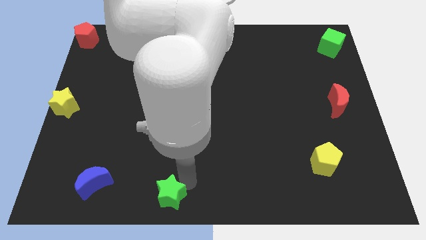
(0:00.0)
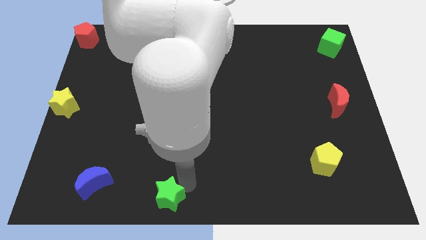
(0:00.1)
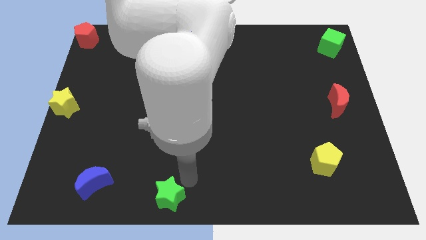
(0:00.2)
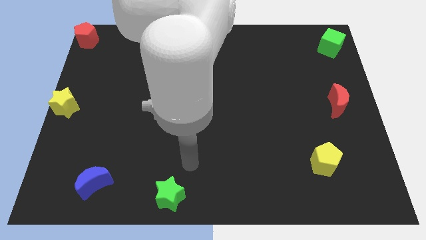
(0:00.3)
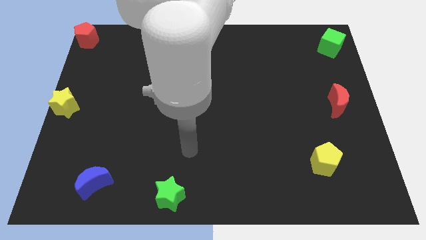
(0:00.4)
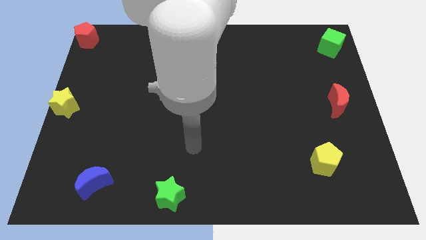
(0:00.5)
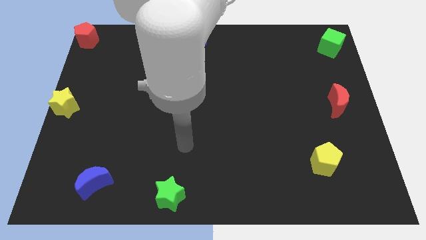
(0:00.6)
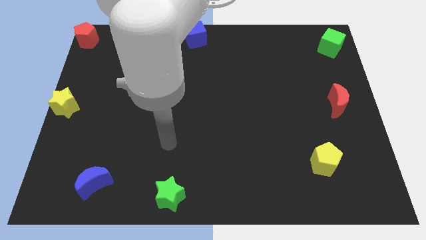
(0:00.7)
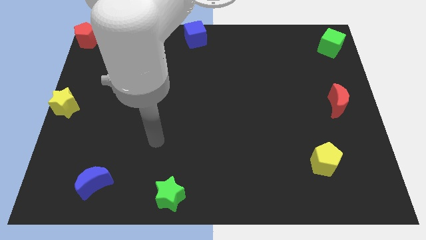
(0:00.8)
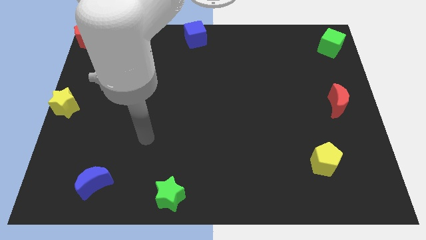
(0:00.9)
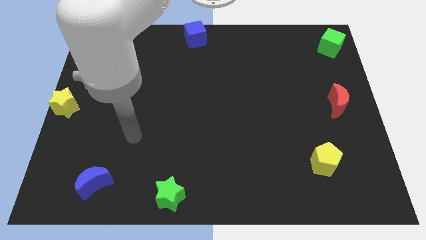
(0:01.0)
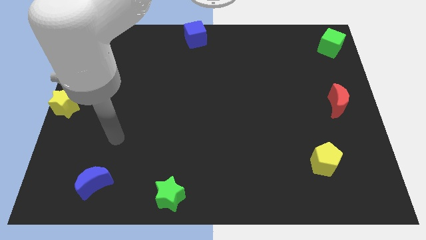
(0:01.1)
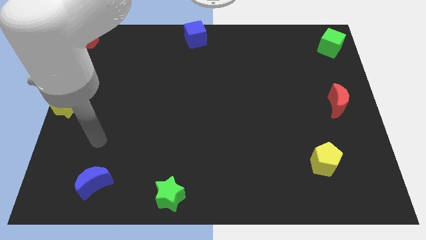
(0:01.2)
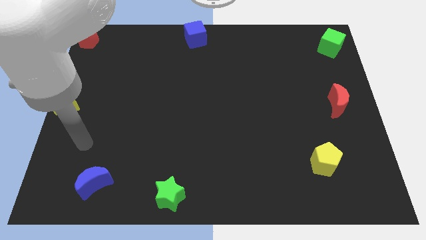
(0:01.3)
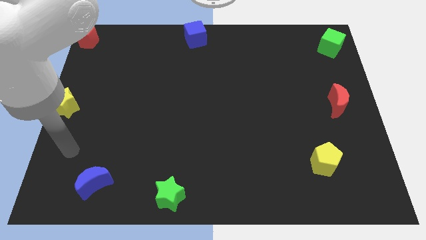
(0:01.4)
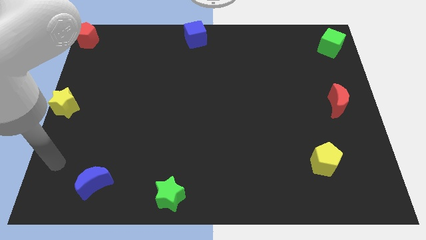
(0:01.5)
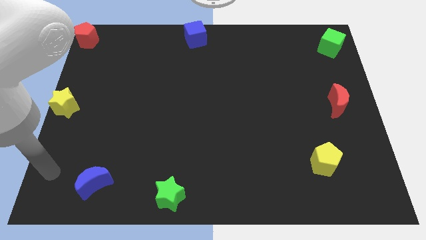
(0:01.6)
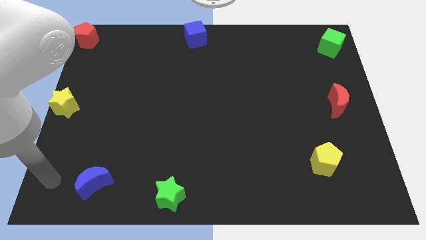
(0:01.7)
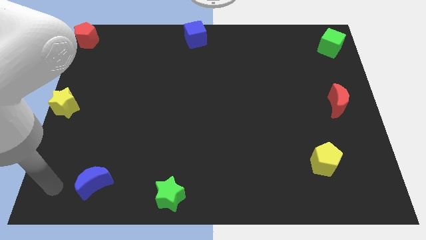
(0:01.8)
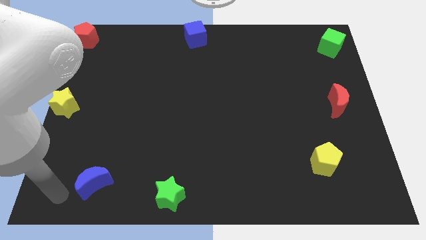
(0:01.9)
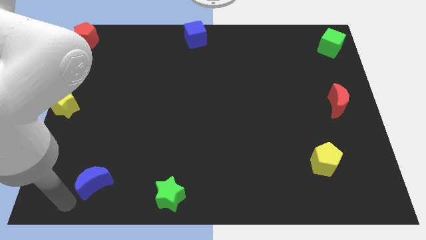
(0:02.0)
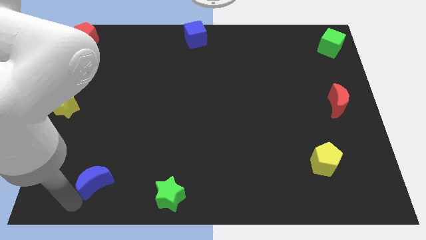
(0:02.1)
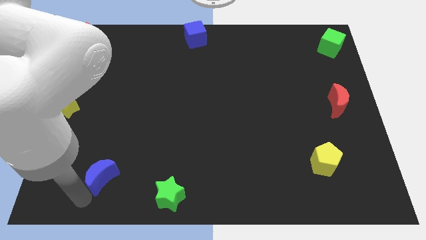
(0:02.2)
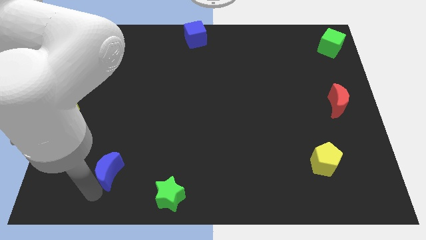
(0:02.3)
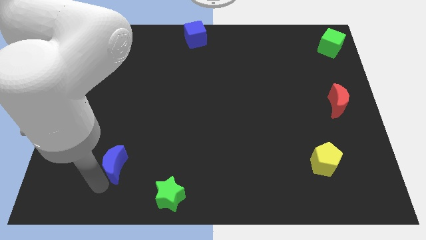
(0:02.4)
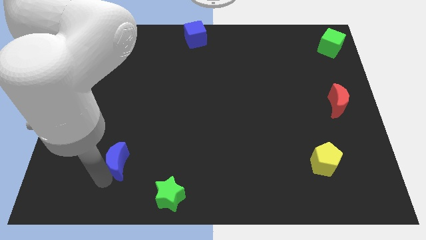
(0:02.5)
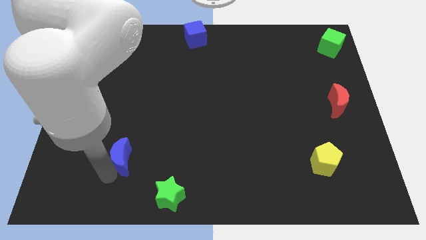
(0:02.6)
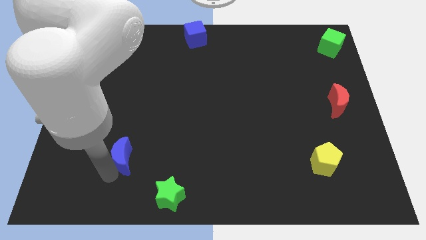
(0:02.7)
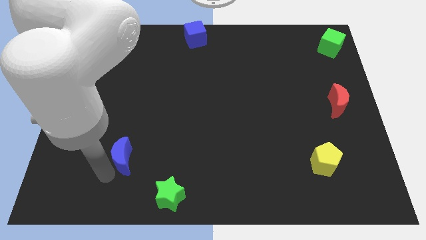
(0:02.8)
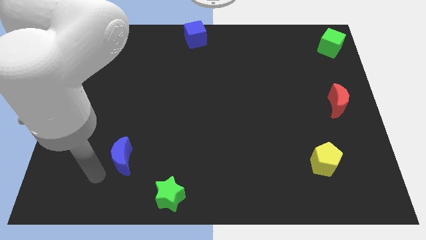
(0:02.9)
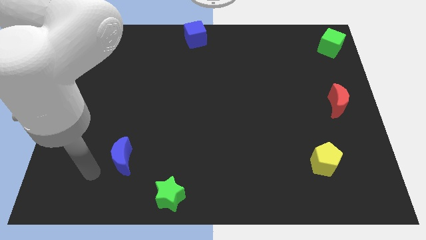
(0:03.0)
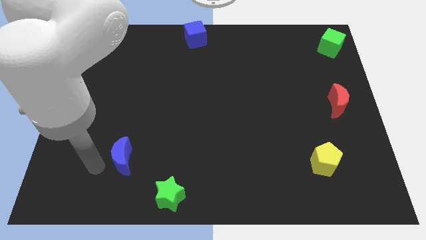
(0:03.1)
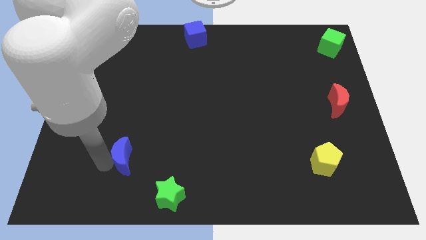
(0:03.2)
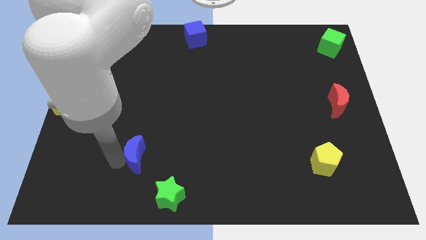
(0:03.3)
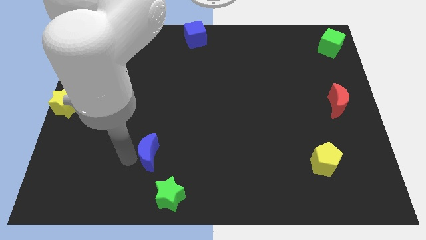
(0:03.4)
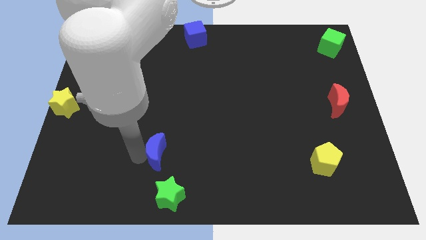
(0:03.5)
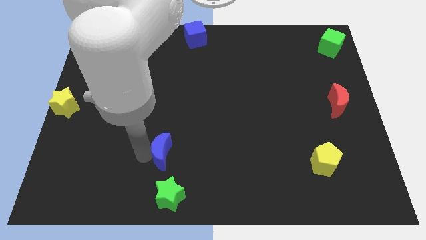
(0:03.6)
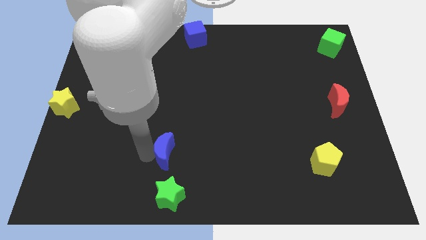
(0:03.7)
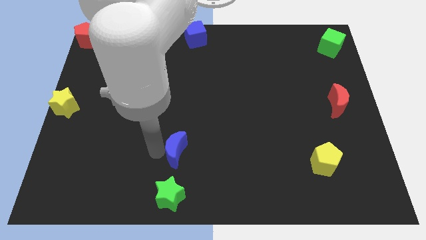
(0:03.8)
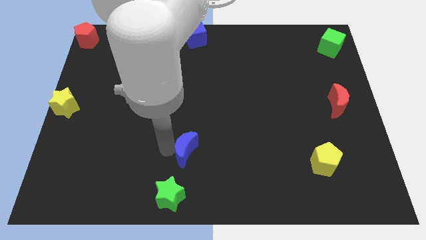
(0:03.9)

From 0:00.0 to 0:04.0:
move the blue moon above the green star

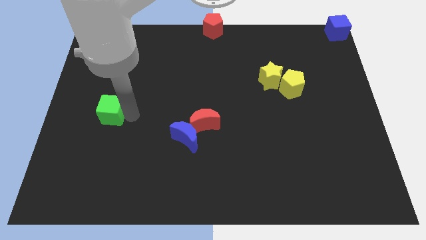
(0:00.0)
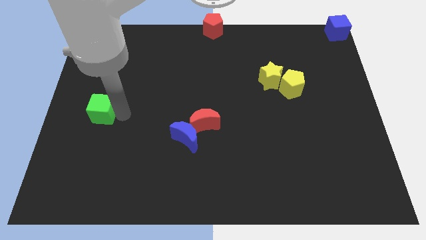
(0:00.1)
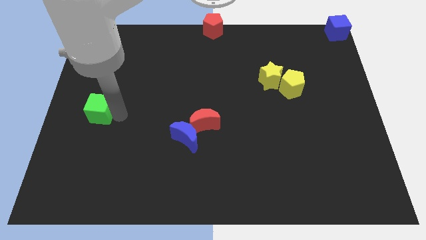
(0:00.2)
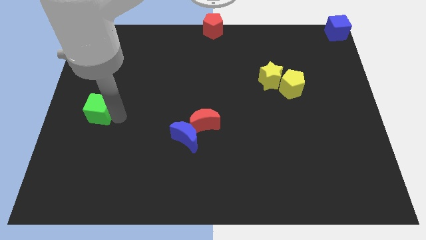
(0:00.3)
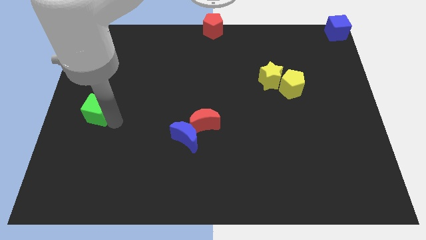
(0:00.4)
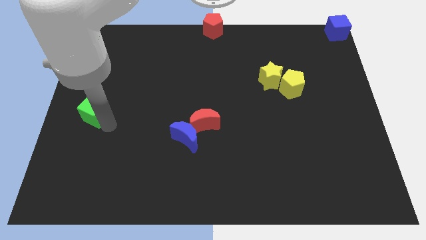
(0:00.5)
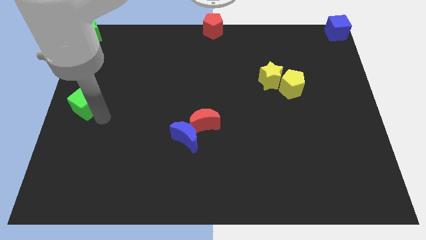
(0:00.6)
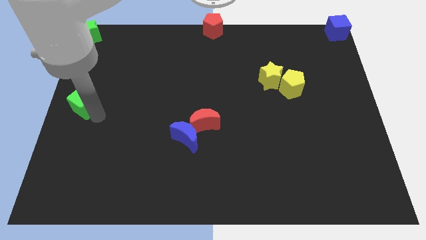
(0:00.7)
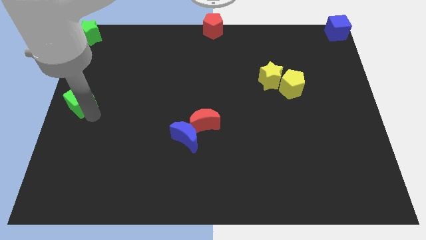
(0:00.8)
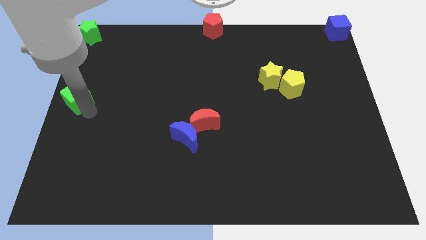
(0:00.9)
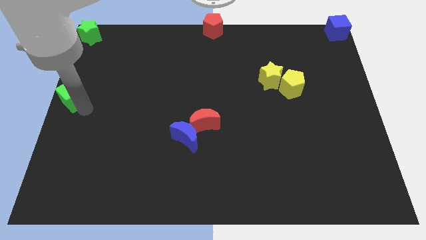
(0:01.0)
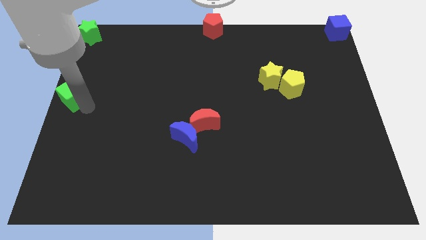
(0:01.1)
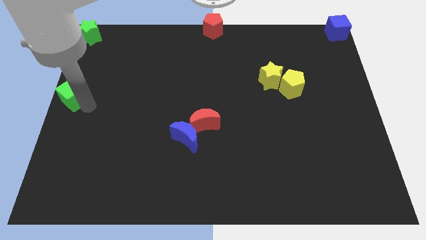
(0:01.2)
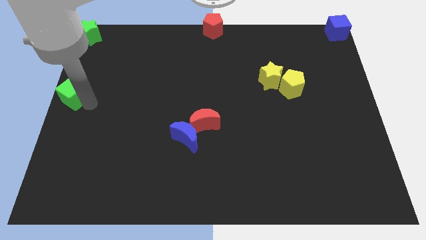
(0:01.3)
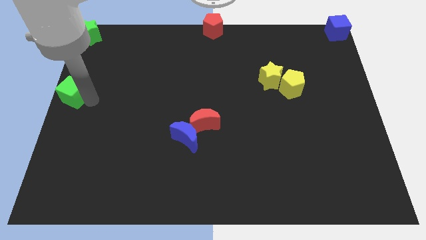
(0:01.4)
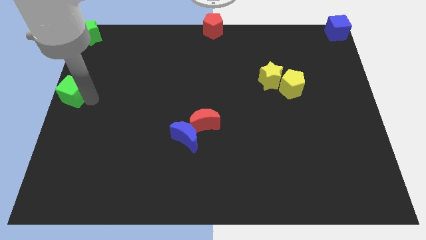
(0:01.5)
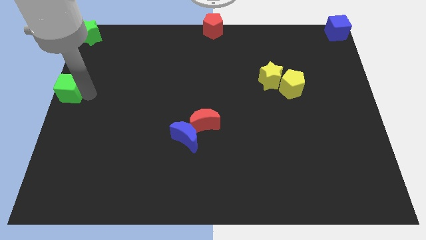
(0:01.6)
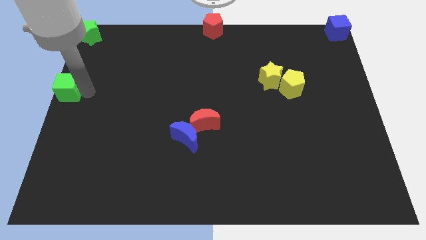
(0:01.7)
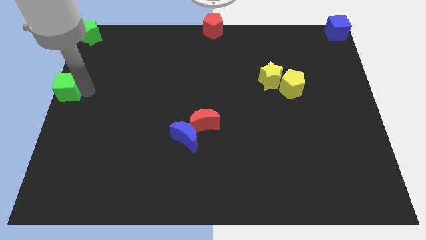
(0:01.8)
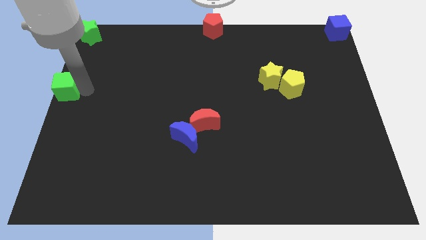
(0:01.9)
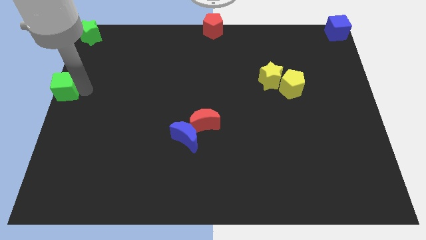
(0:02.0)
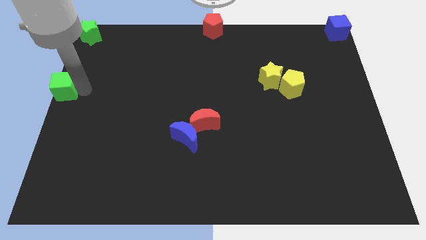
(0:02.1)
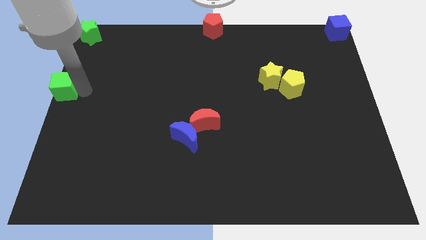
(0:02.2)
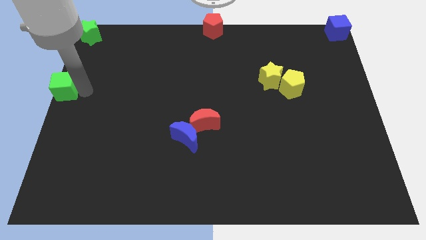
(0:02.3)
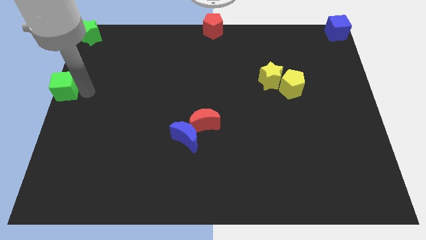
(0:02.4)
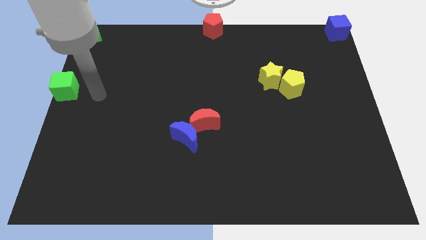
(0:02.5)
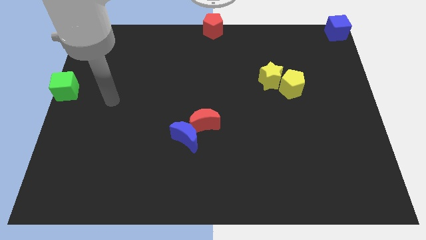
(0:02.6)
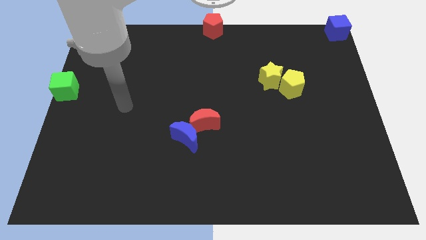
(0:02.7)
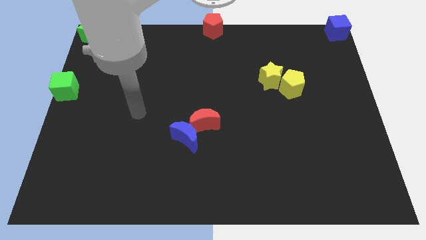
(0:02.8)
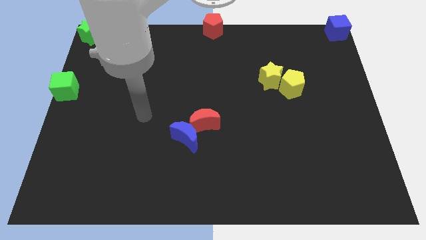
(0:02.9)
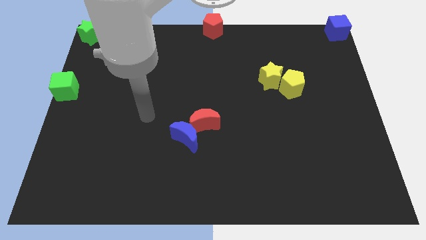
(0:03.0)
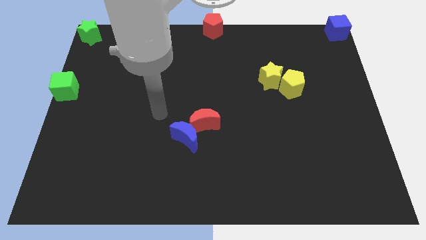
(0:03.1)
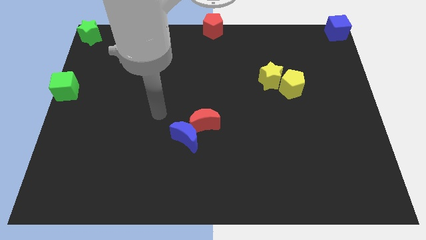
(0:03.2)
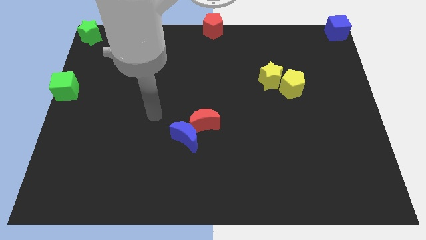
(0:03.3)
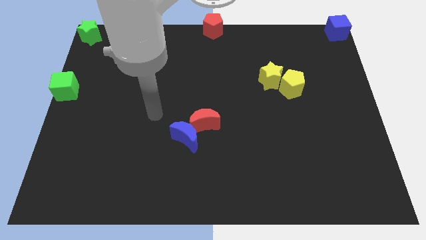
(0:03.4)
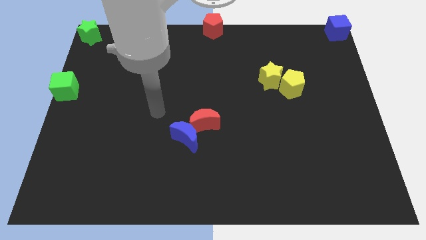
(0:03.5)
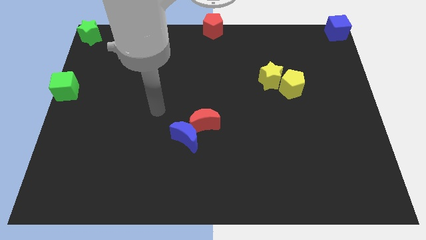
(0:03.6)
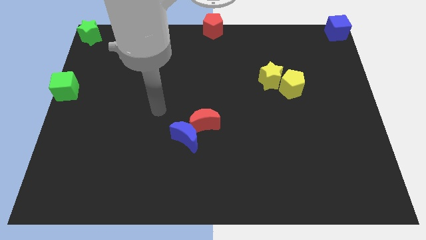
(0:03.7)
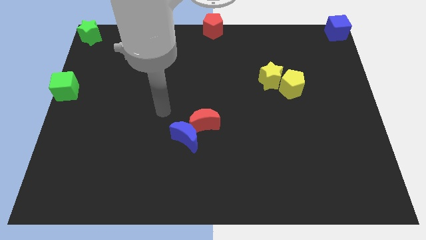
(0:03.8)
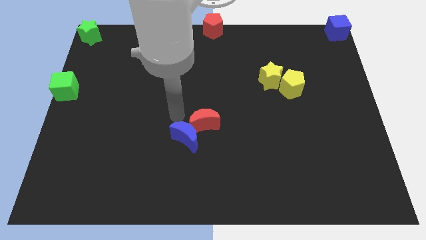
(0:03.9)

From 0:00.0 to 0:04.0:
move the green cube to the center left

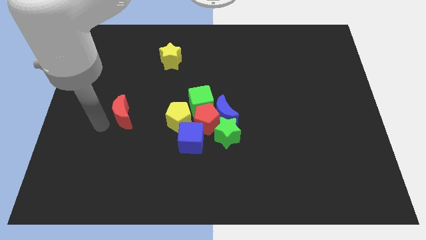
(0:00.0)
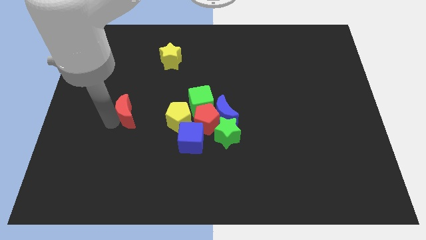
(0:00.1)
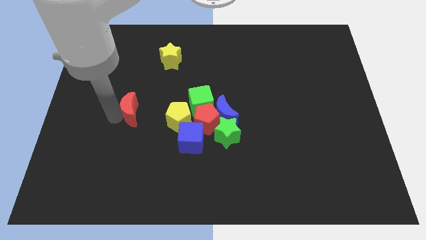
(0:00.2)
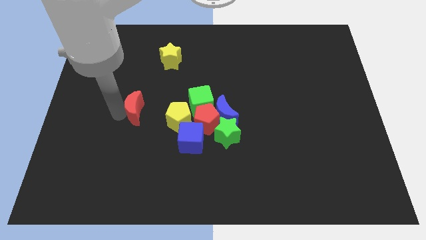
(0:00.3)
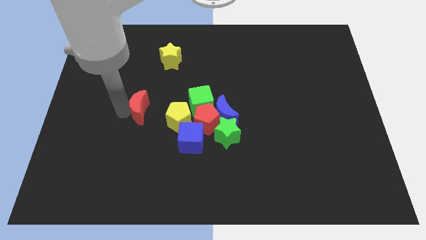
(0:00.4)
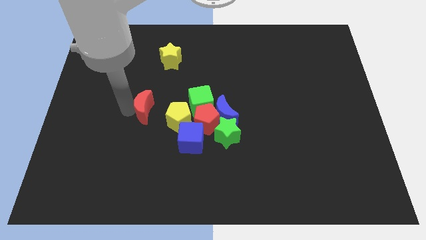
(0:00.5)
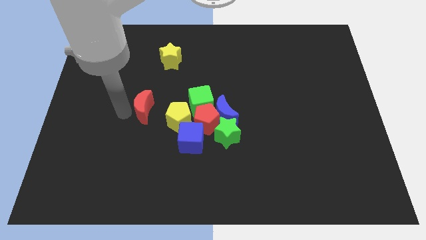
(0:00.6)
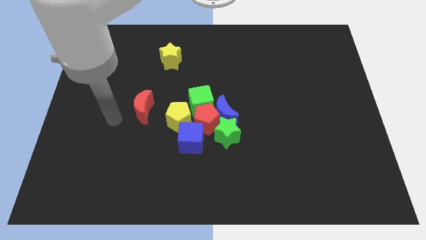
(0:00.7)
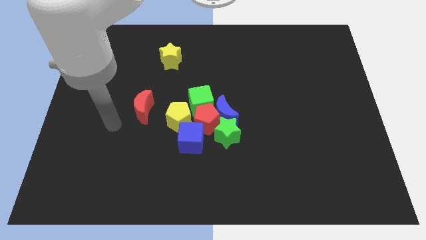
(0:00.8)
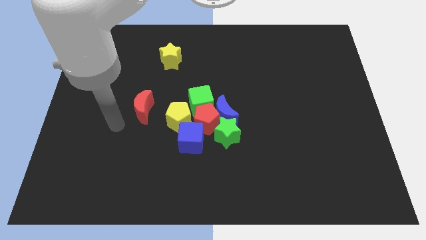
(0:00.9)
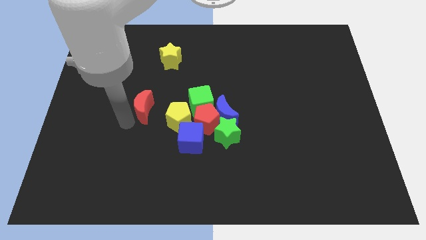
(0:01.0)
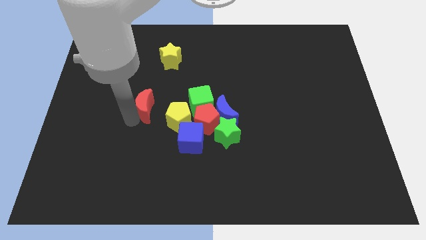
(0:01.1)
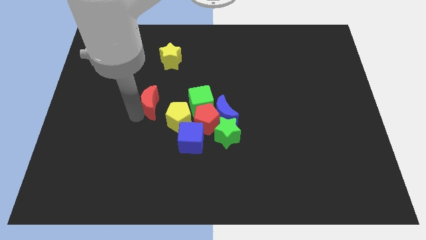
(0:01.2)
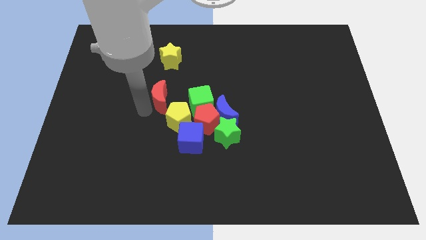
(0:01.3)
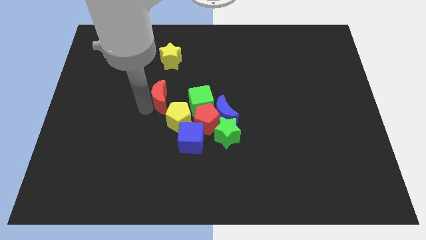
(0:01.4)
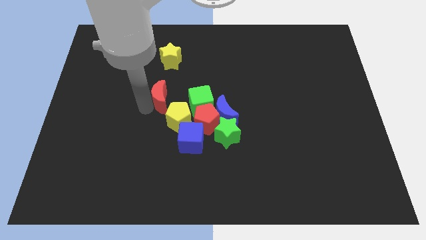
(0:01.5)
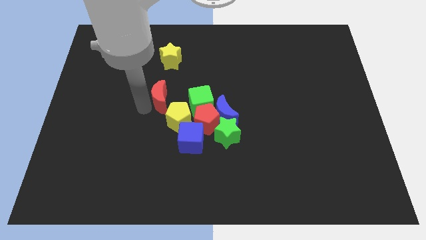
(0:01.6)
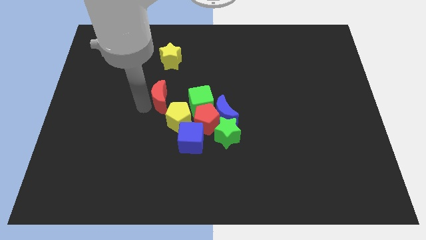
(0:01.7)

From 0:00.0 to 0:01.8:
place the red crescent above the yellow pentagon
